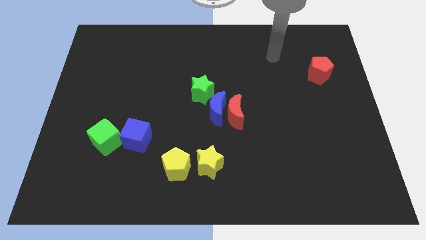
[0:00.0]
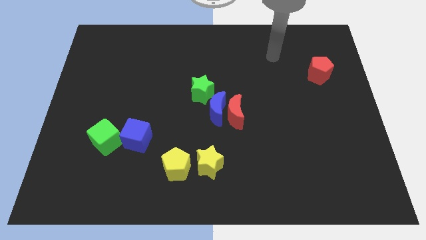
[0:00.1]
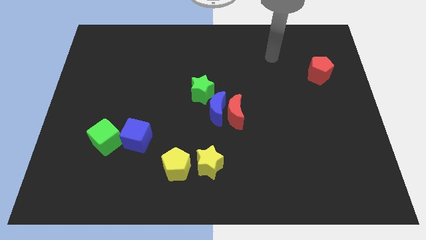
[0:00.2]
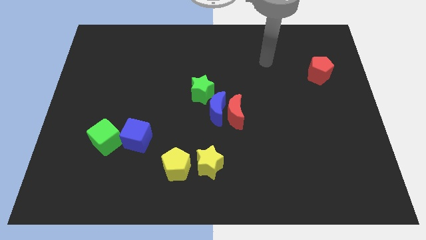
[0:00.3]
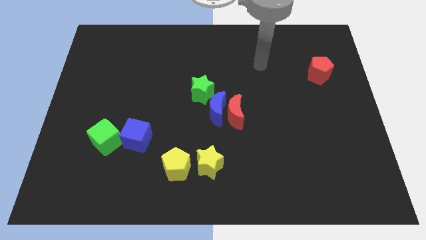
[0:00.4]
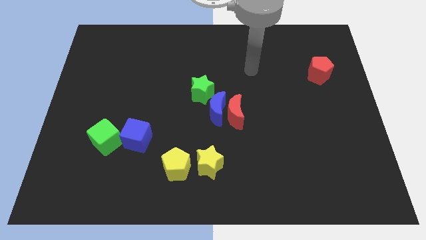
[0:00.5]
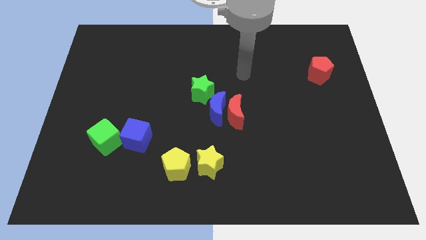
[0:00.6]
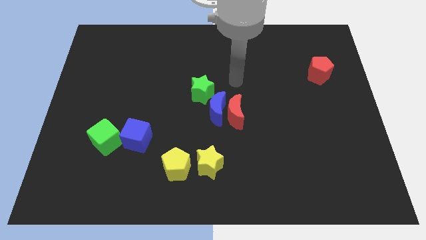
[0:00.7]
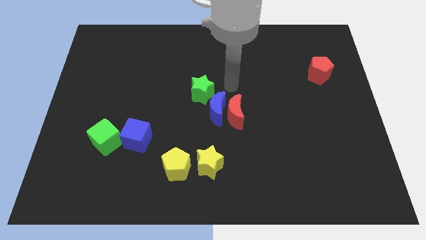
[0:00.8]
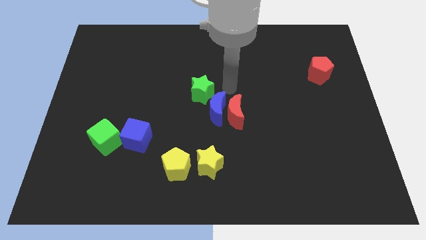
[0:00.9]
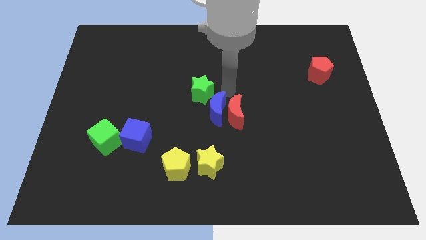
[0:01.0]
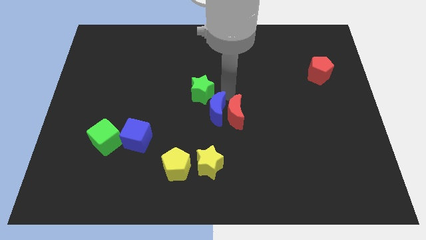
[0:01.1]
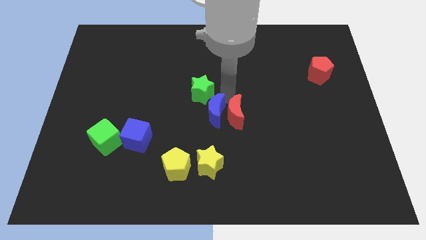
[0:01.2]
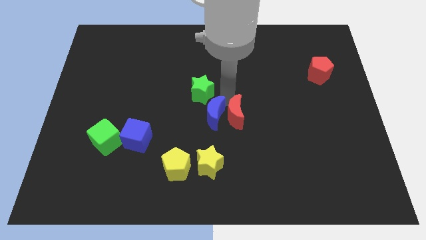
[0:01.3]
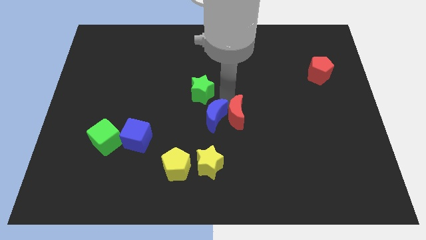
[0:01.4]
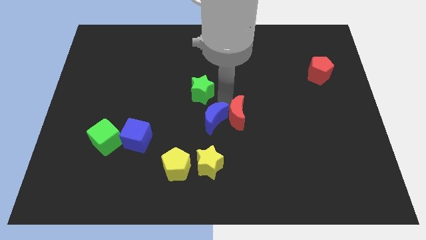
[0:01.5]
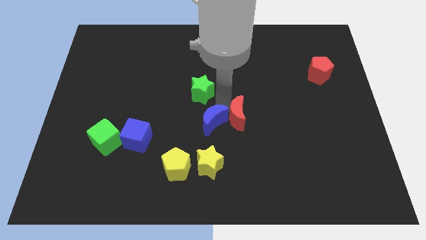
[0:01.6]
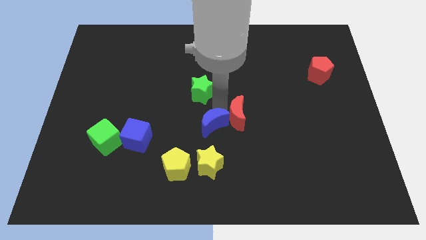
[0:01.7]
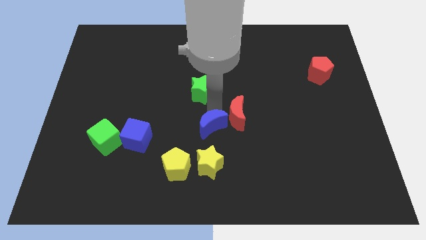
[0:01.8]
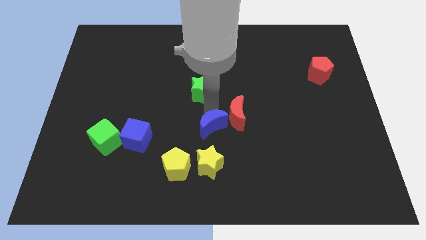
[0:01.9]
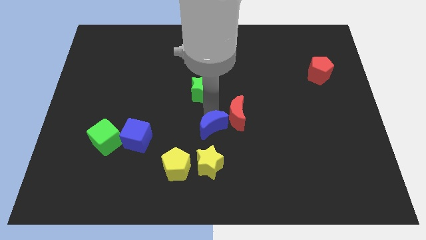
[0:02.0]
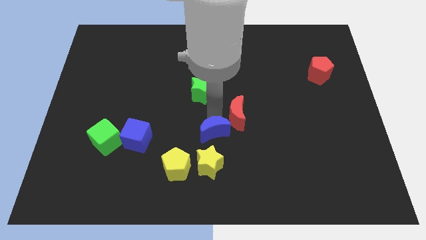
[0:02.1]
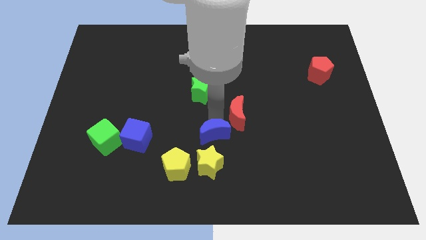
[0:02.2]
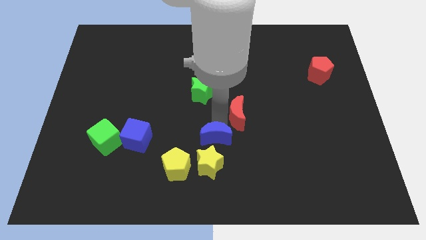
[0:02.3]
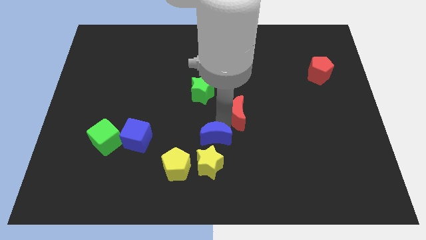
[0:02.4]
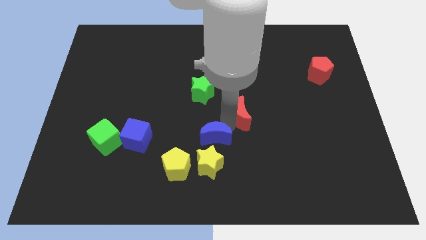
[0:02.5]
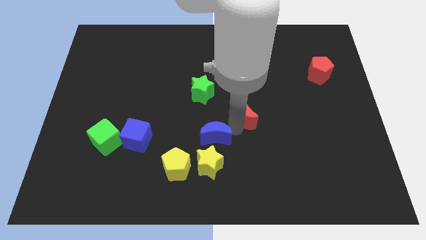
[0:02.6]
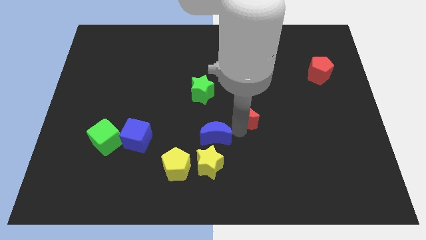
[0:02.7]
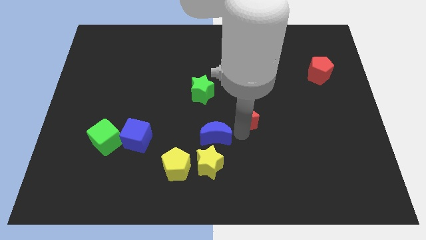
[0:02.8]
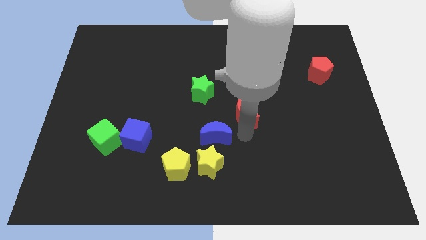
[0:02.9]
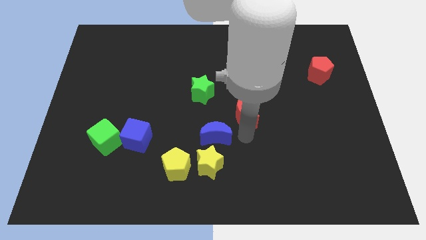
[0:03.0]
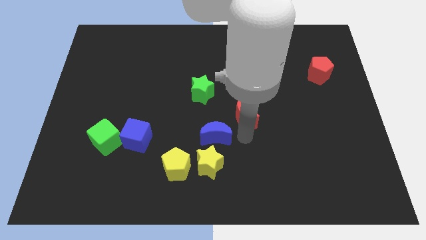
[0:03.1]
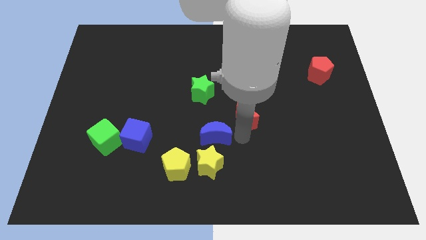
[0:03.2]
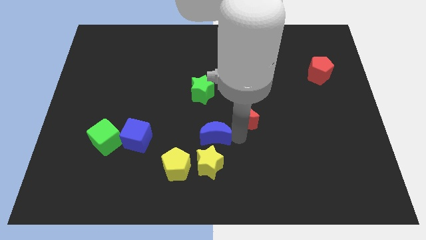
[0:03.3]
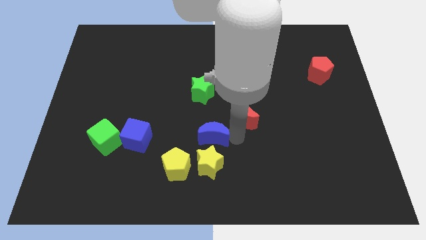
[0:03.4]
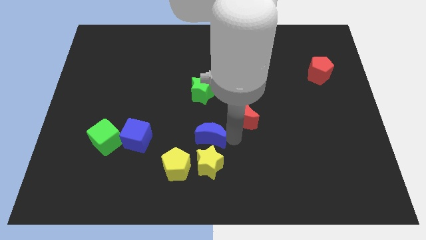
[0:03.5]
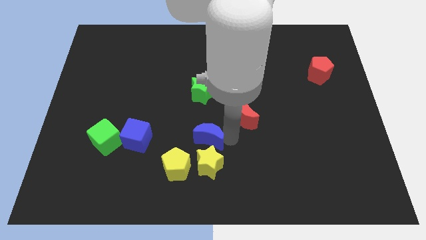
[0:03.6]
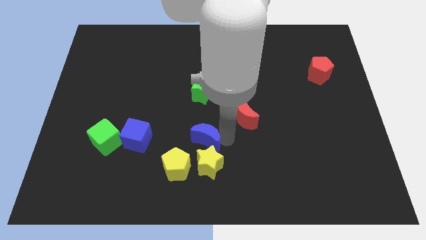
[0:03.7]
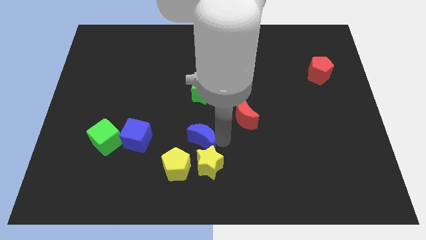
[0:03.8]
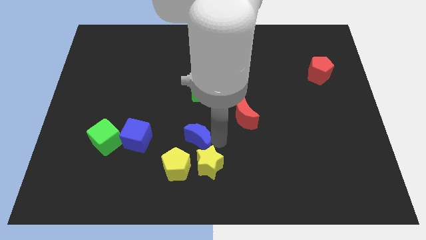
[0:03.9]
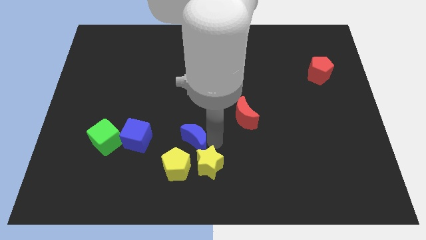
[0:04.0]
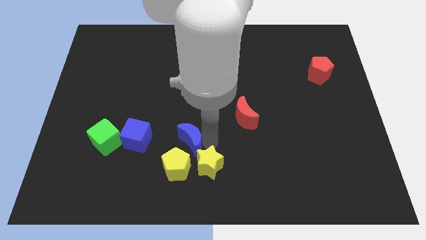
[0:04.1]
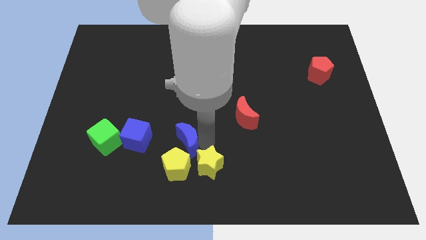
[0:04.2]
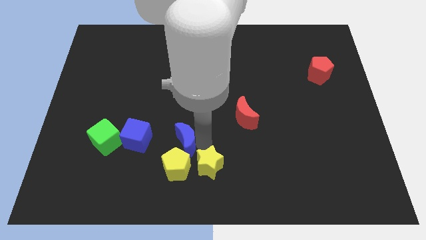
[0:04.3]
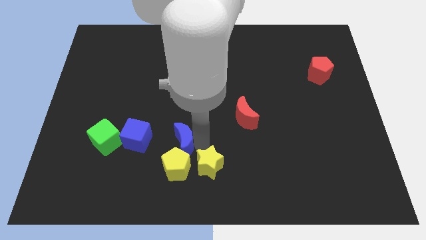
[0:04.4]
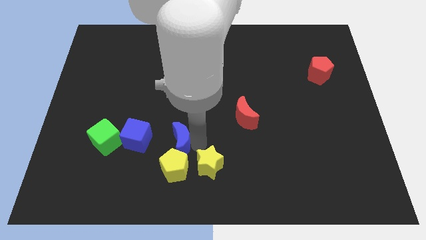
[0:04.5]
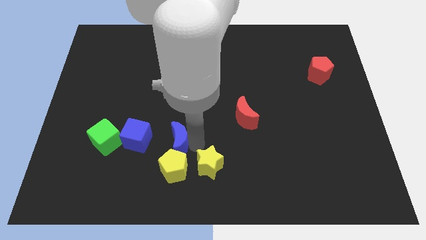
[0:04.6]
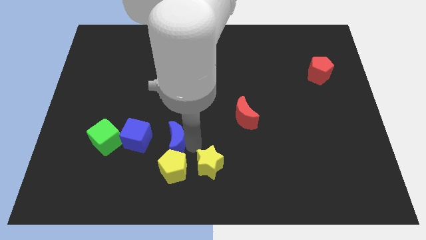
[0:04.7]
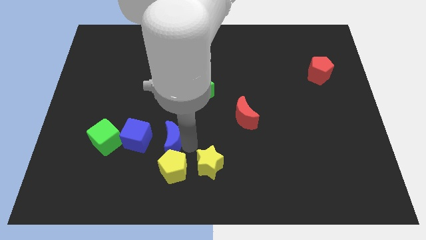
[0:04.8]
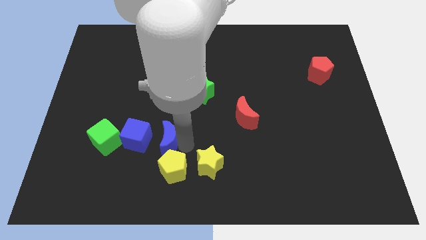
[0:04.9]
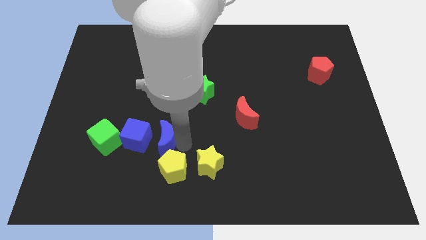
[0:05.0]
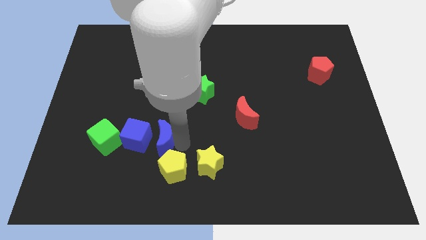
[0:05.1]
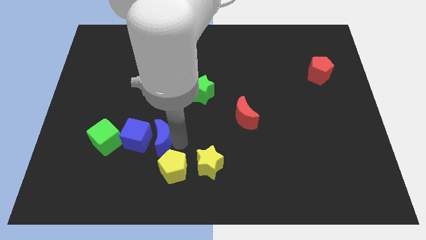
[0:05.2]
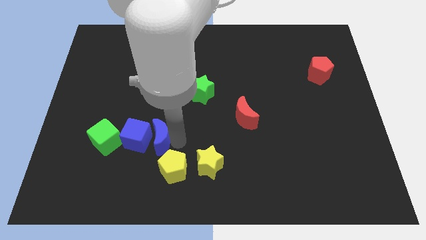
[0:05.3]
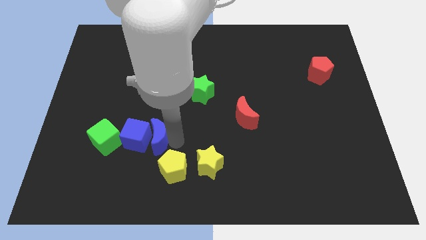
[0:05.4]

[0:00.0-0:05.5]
move the blue moon next to the blue cube

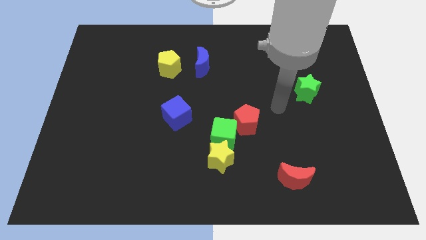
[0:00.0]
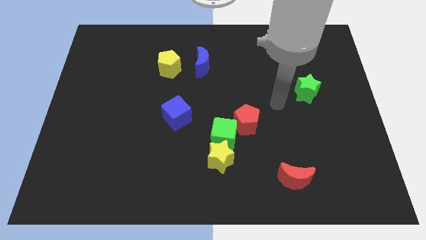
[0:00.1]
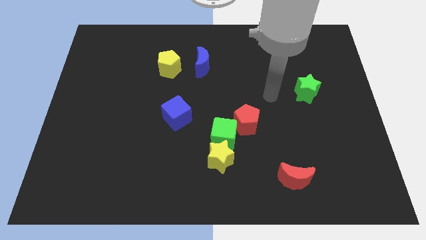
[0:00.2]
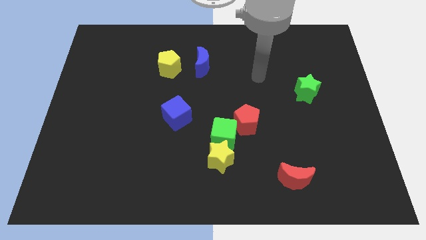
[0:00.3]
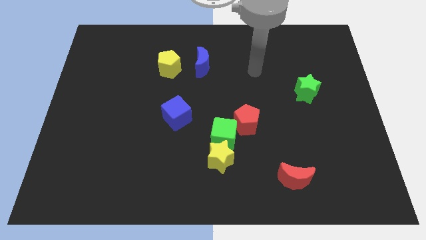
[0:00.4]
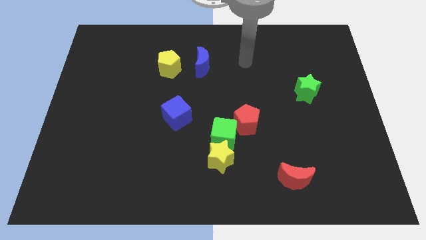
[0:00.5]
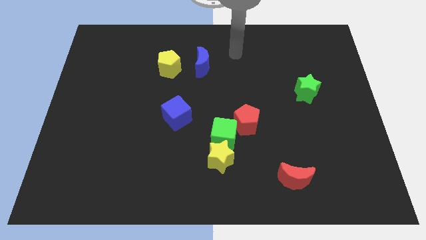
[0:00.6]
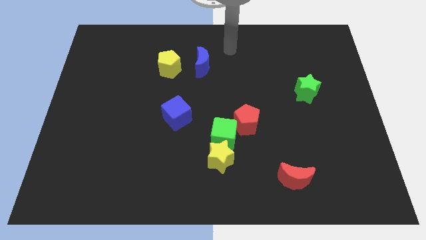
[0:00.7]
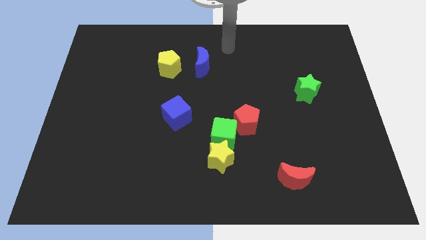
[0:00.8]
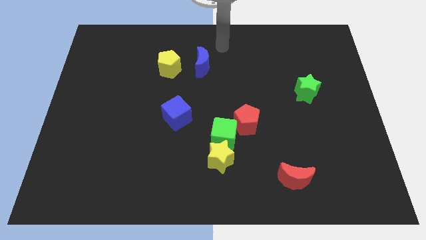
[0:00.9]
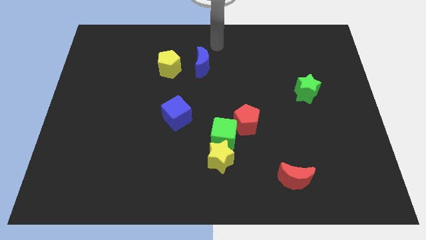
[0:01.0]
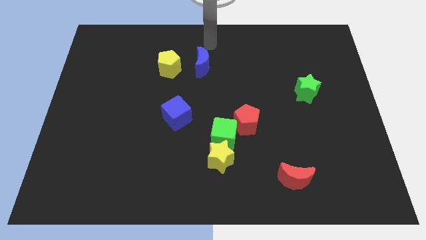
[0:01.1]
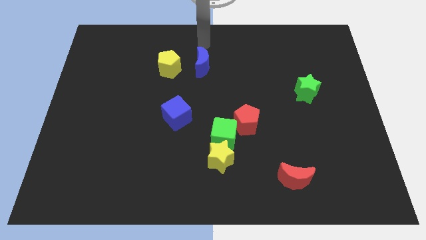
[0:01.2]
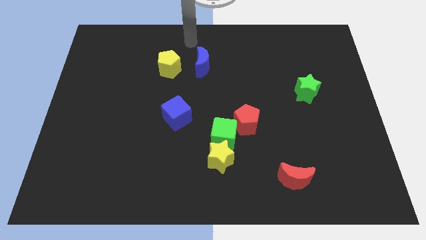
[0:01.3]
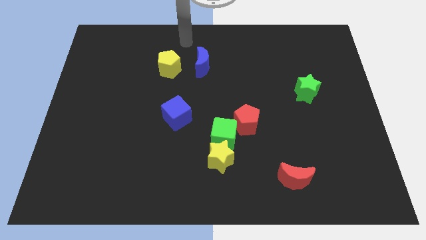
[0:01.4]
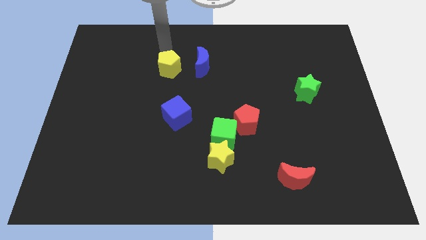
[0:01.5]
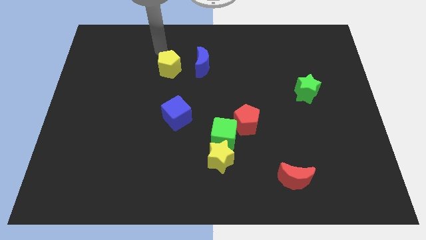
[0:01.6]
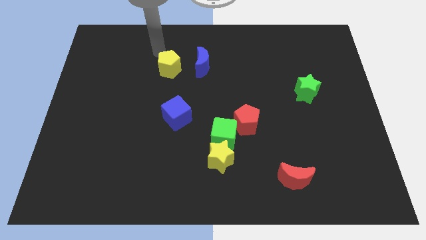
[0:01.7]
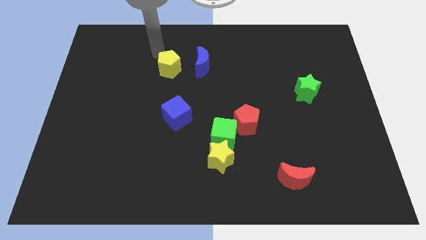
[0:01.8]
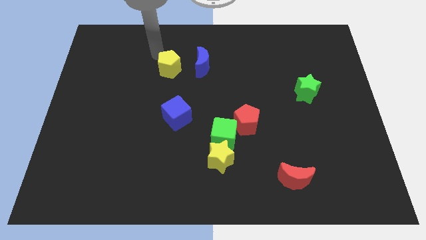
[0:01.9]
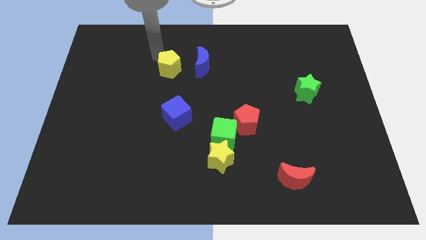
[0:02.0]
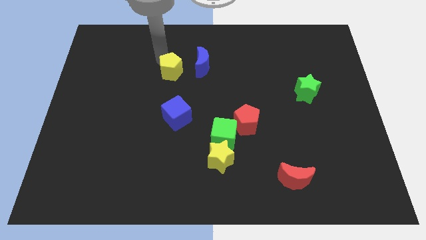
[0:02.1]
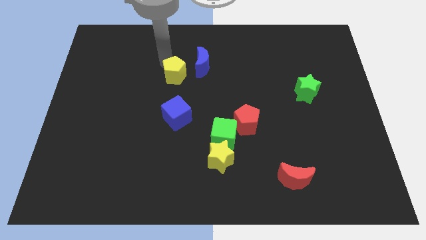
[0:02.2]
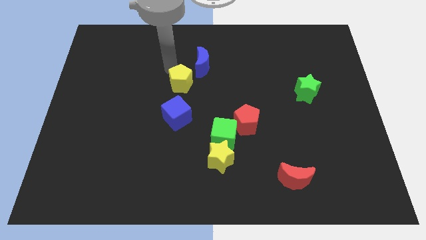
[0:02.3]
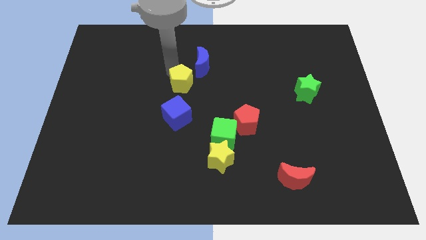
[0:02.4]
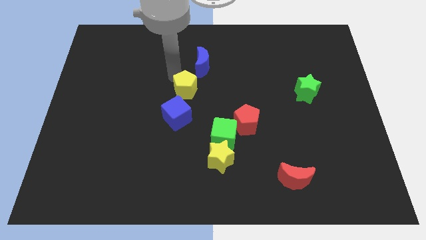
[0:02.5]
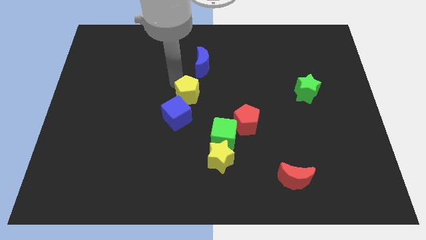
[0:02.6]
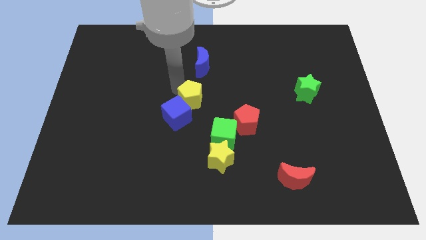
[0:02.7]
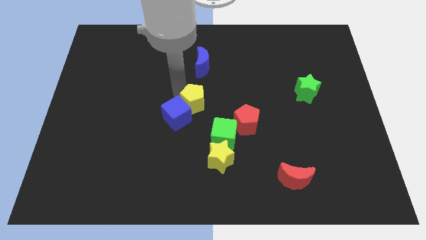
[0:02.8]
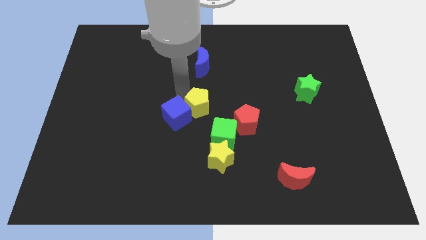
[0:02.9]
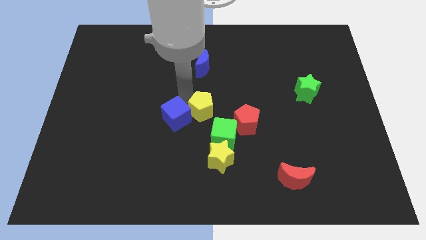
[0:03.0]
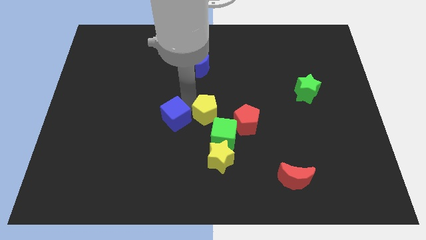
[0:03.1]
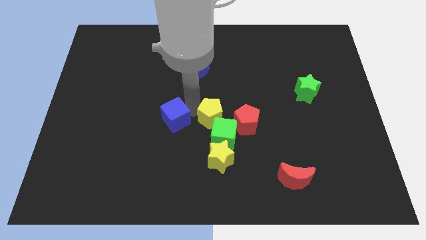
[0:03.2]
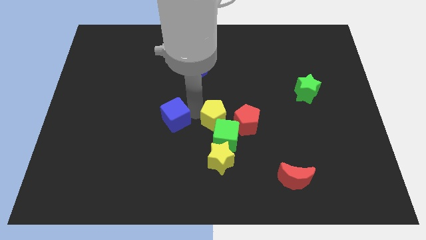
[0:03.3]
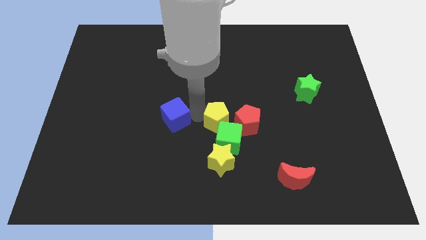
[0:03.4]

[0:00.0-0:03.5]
move the yellow pentagon towards the green cube
